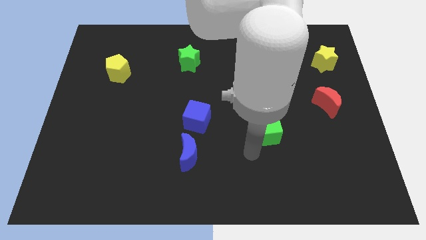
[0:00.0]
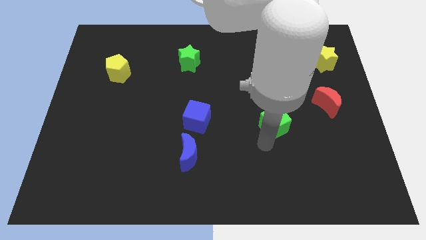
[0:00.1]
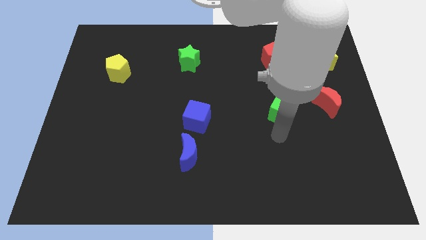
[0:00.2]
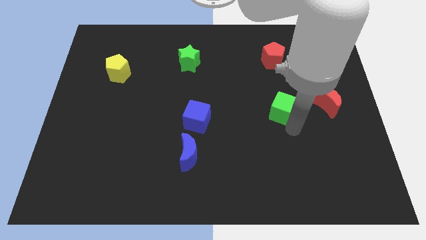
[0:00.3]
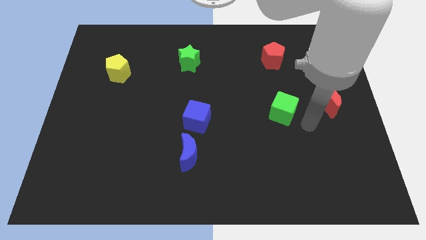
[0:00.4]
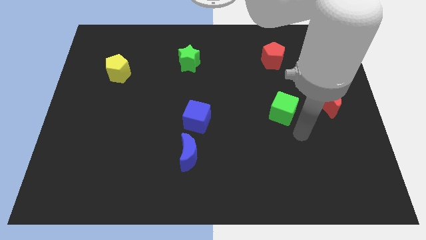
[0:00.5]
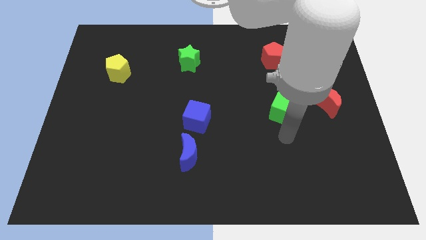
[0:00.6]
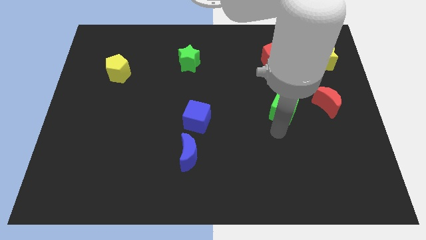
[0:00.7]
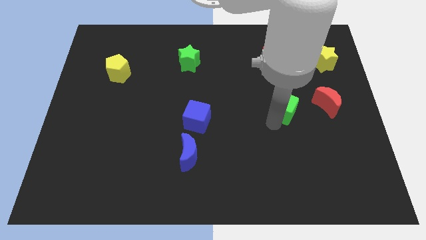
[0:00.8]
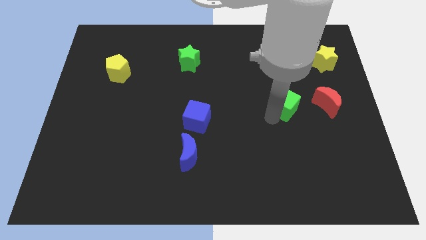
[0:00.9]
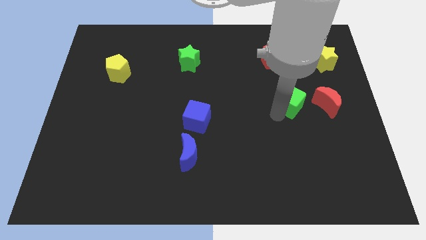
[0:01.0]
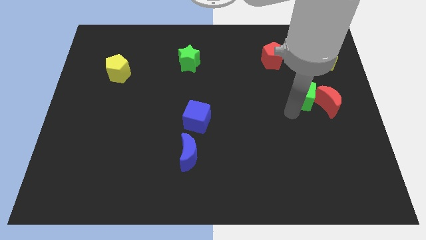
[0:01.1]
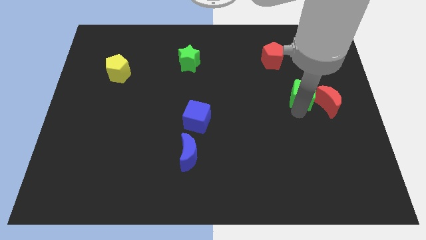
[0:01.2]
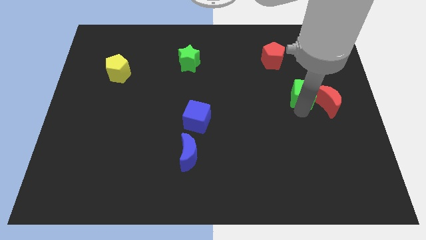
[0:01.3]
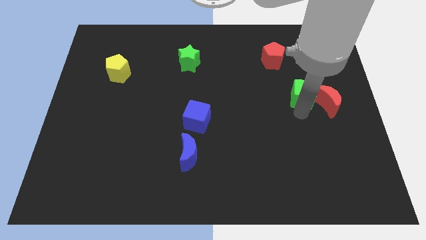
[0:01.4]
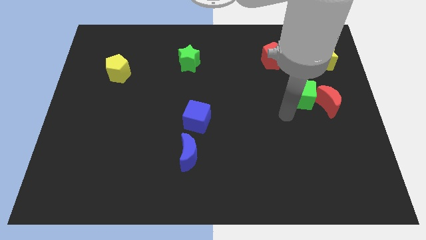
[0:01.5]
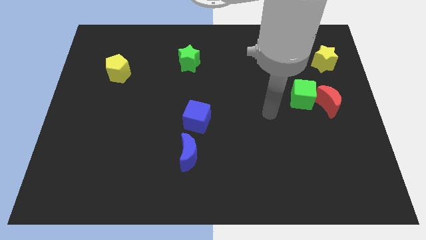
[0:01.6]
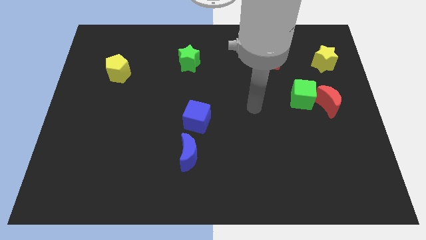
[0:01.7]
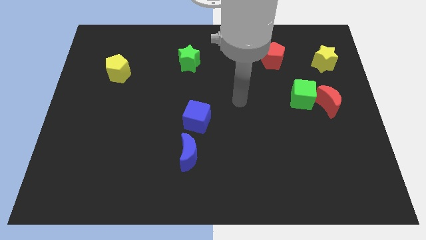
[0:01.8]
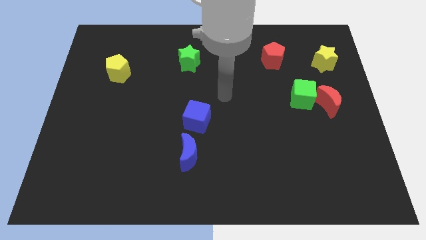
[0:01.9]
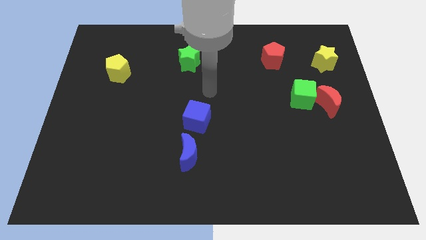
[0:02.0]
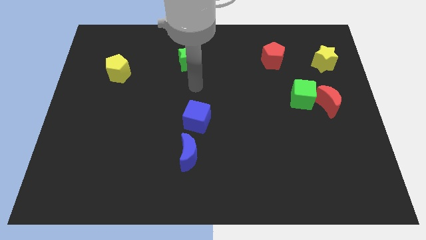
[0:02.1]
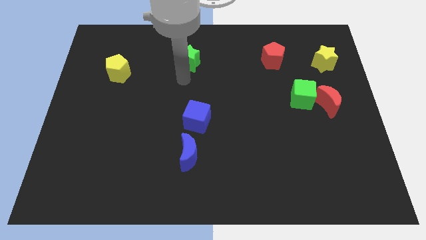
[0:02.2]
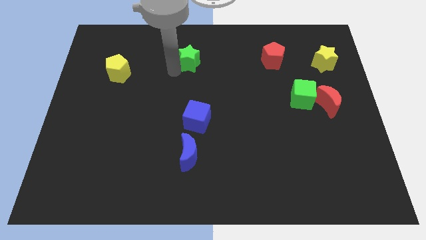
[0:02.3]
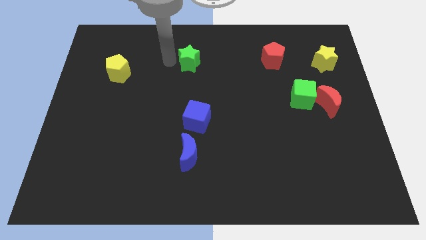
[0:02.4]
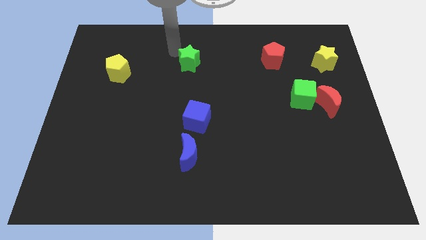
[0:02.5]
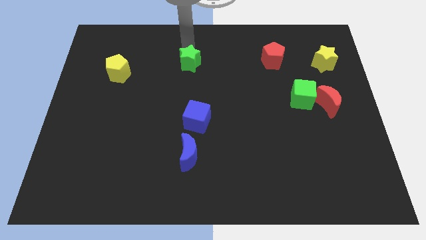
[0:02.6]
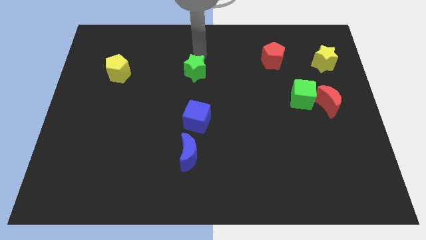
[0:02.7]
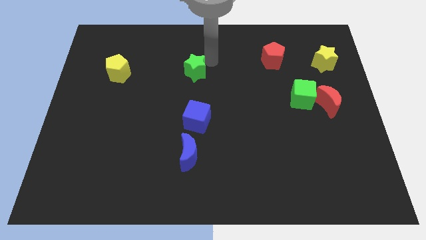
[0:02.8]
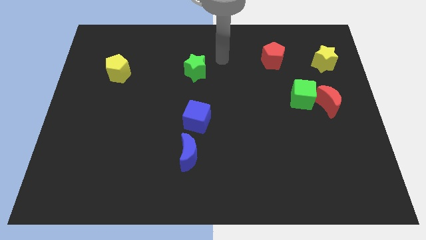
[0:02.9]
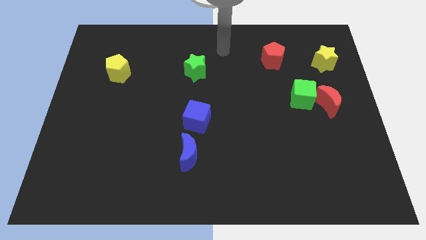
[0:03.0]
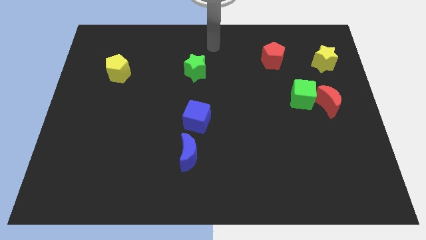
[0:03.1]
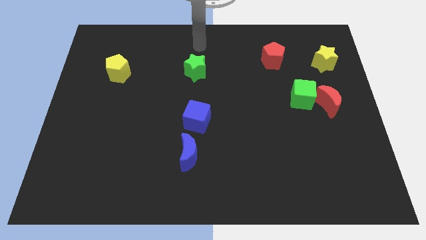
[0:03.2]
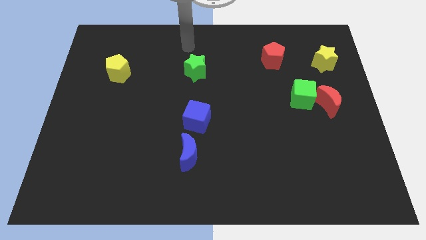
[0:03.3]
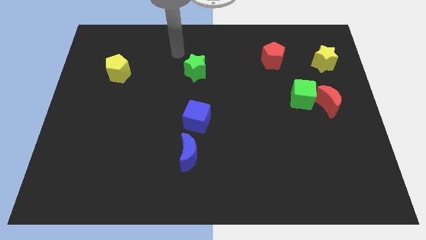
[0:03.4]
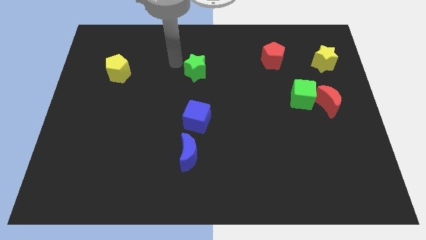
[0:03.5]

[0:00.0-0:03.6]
place green cube beside red crescent

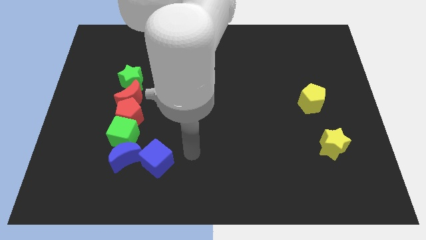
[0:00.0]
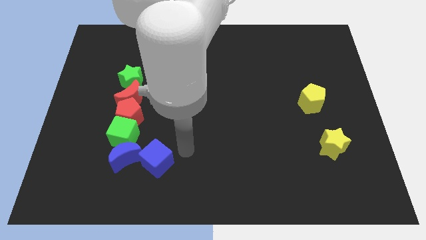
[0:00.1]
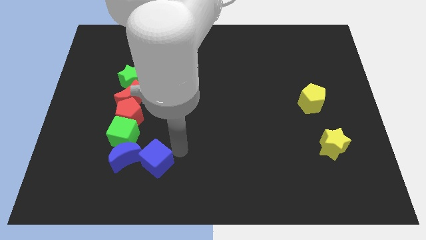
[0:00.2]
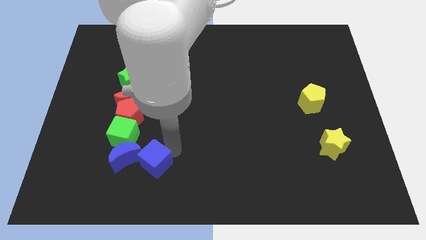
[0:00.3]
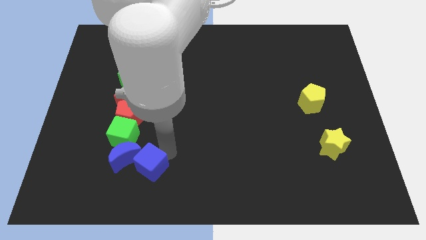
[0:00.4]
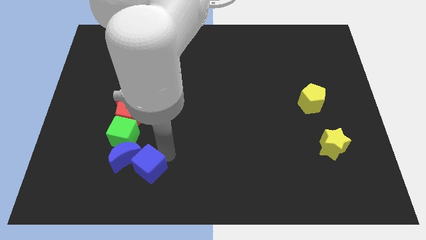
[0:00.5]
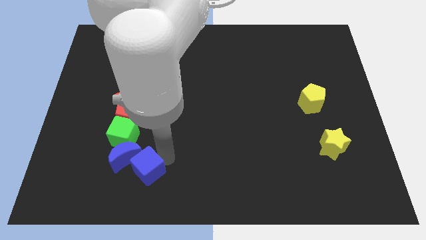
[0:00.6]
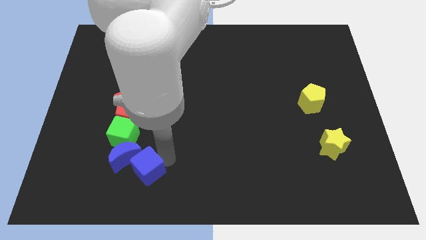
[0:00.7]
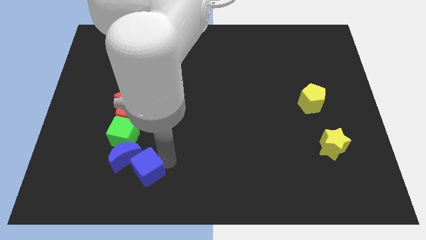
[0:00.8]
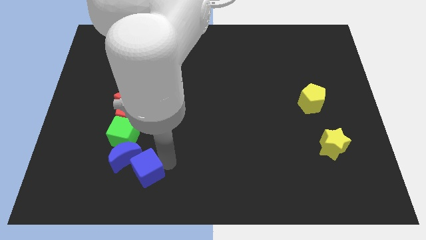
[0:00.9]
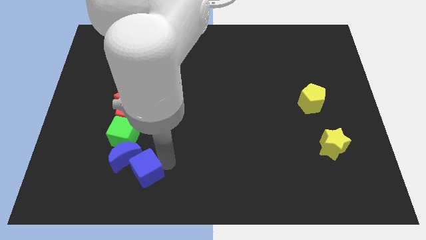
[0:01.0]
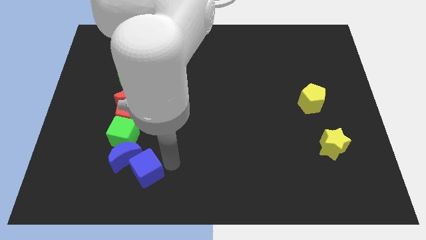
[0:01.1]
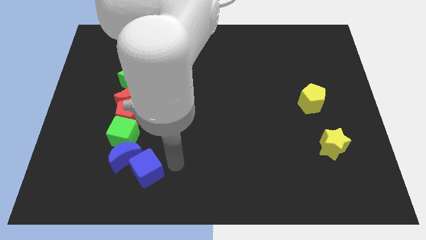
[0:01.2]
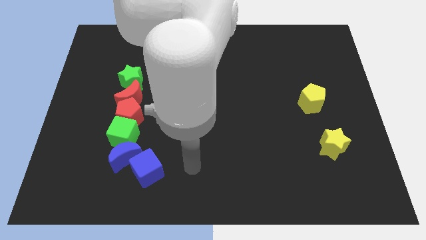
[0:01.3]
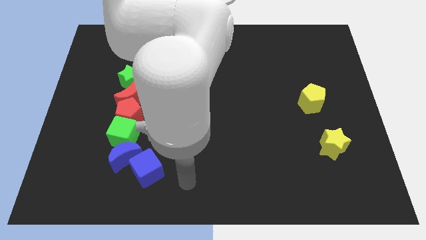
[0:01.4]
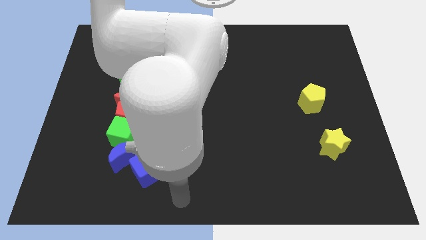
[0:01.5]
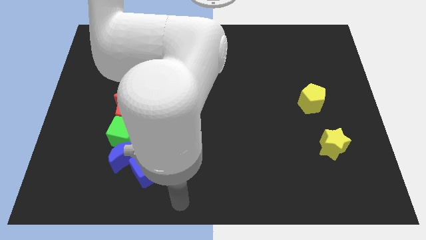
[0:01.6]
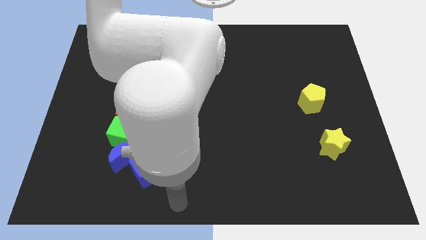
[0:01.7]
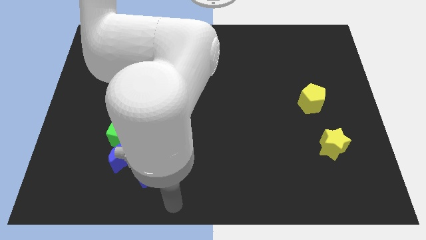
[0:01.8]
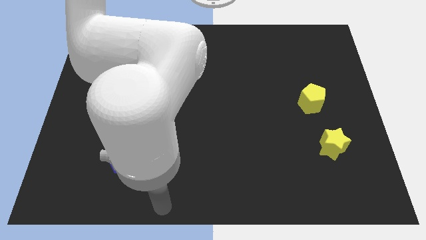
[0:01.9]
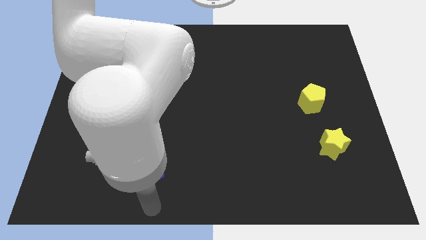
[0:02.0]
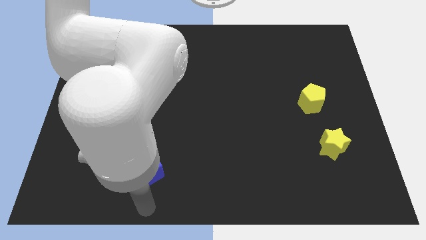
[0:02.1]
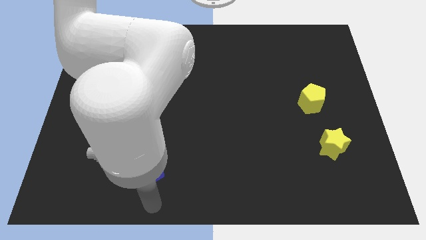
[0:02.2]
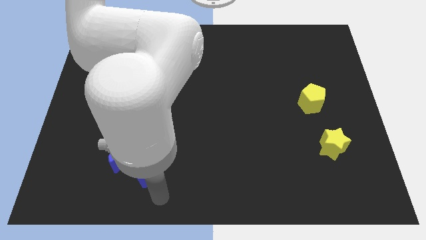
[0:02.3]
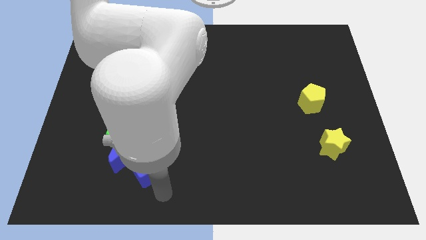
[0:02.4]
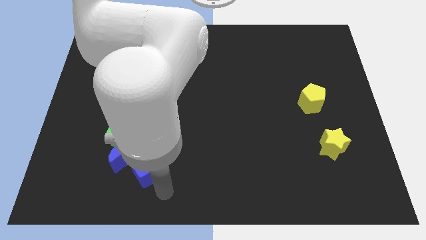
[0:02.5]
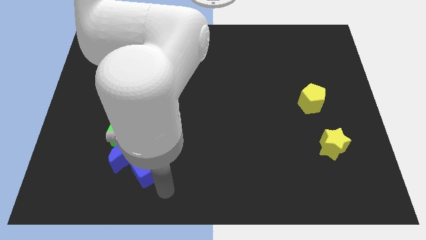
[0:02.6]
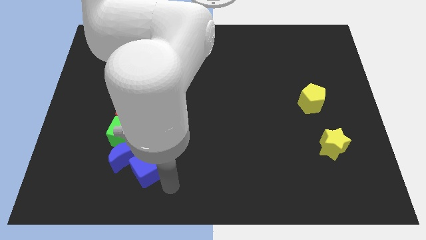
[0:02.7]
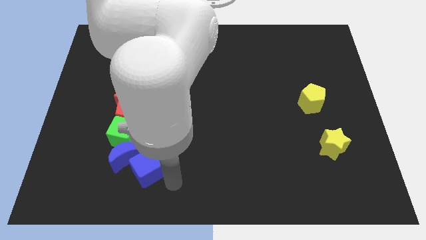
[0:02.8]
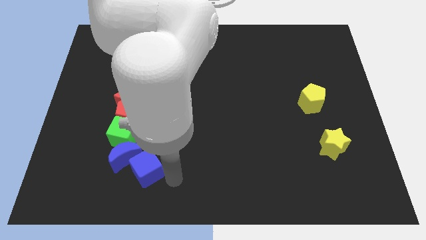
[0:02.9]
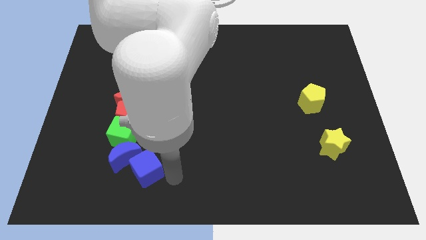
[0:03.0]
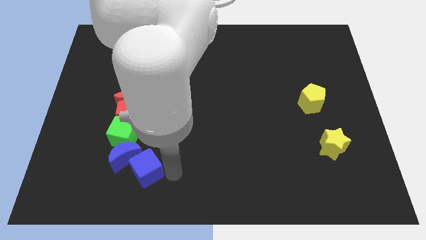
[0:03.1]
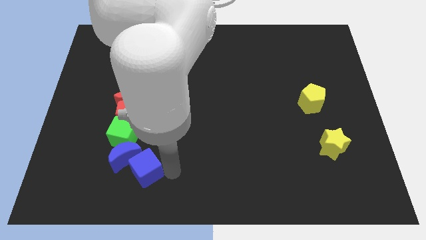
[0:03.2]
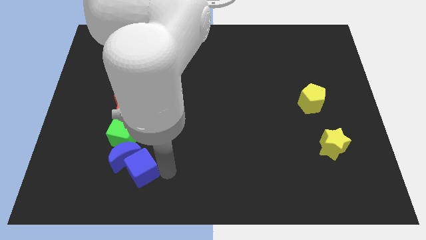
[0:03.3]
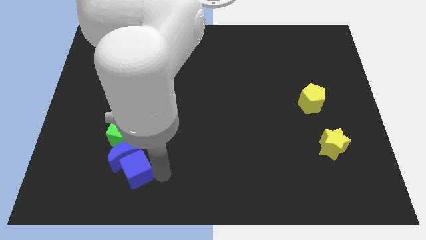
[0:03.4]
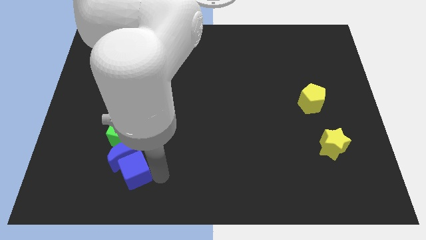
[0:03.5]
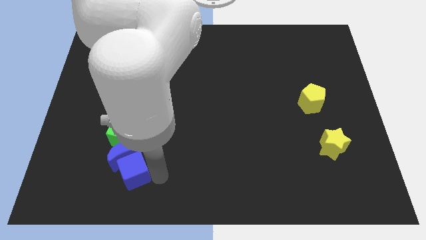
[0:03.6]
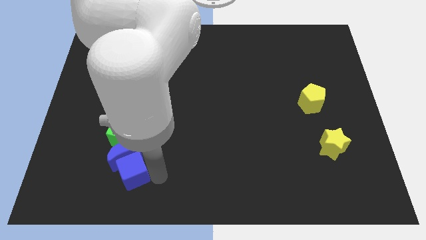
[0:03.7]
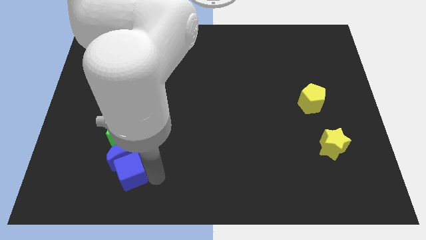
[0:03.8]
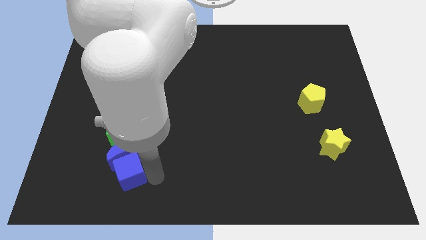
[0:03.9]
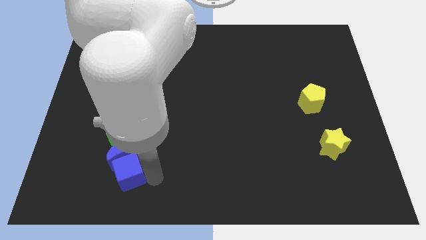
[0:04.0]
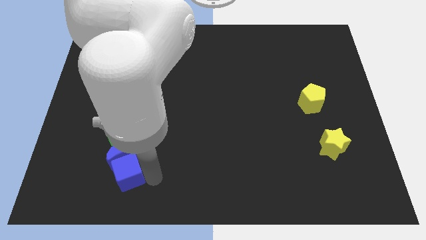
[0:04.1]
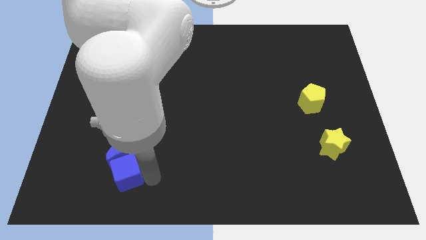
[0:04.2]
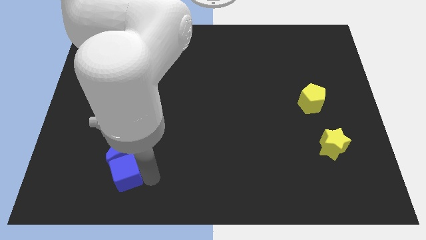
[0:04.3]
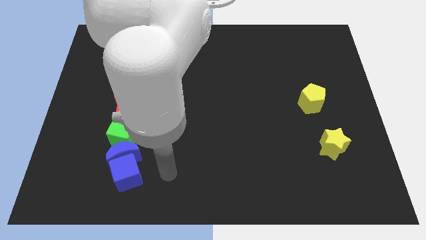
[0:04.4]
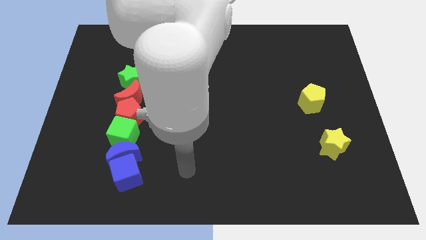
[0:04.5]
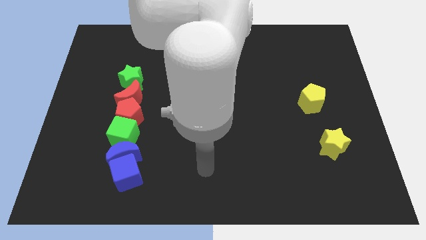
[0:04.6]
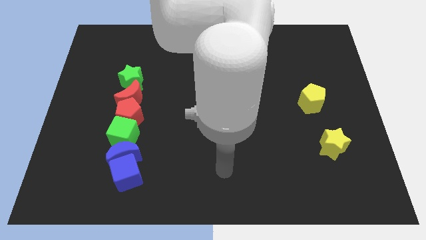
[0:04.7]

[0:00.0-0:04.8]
place the blue cube to the bottom of blue moon

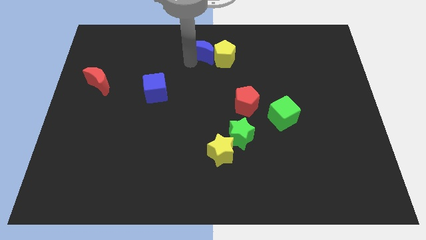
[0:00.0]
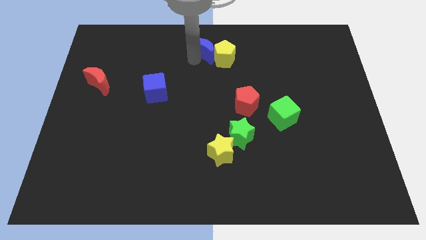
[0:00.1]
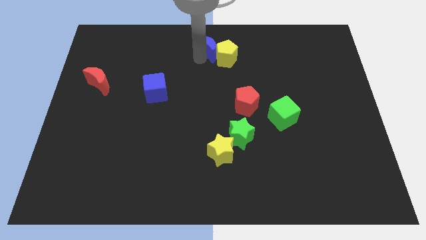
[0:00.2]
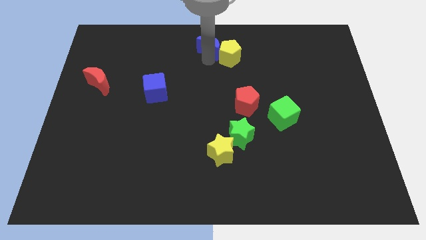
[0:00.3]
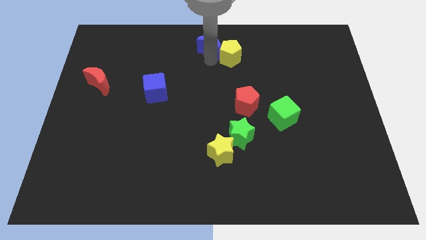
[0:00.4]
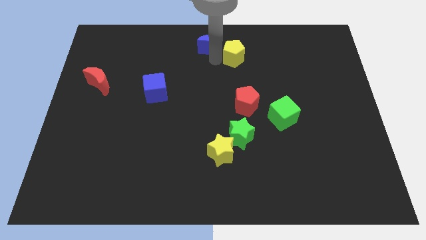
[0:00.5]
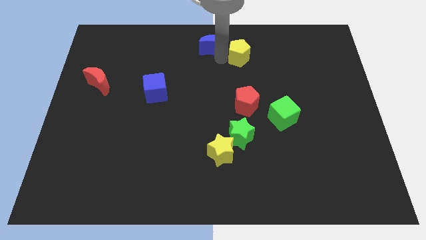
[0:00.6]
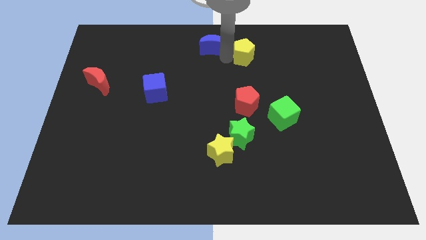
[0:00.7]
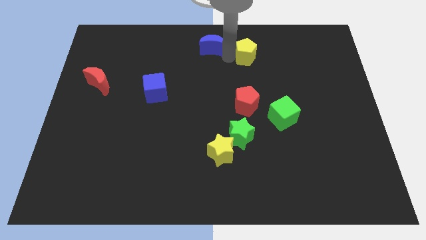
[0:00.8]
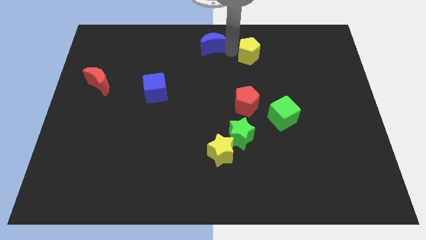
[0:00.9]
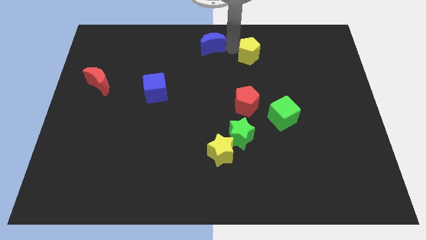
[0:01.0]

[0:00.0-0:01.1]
separate blue crescent and yellow pentagon
